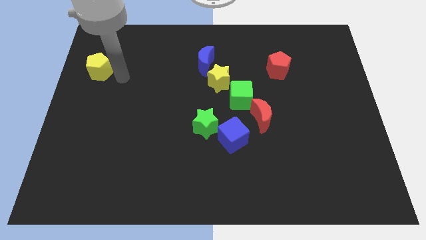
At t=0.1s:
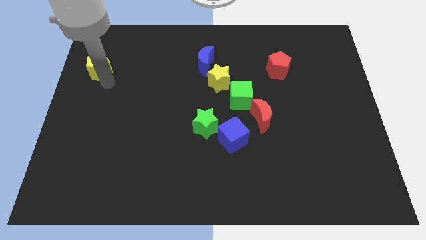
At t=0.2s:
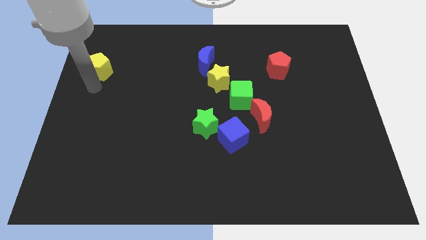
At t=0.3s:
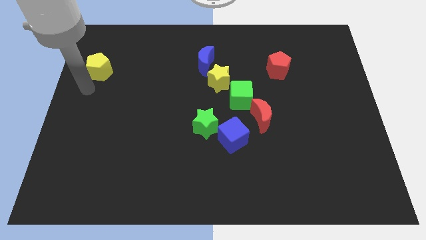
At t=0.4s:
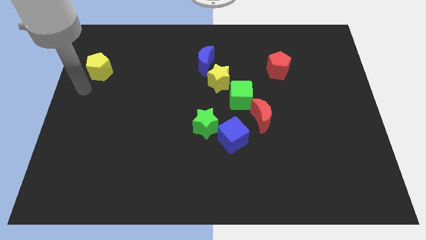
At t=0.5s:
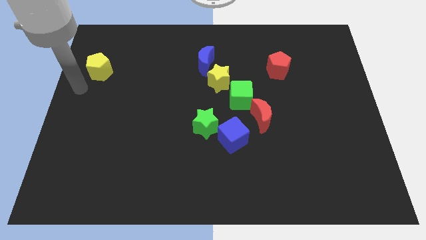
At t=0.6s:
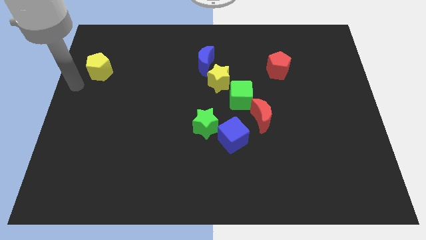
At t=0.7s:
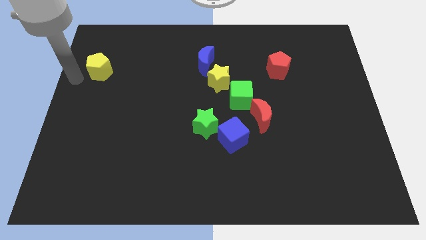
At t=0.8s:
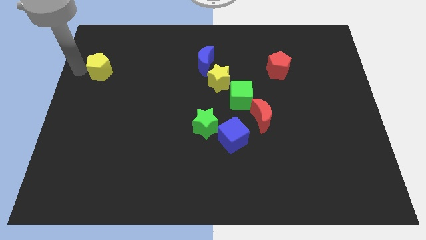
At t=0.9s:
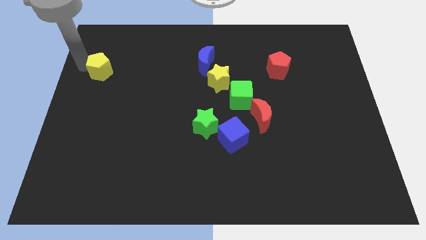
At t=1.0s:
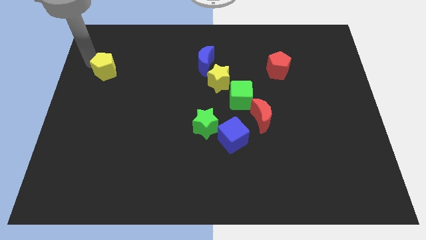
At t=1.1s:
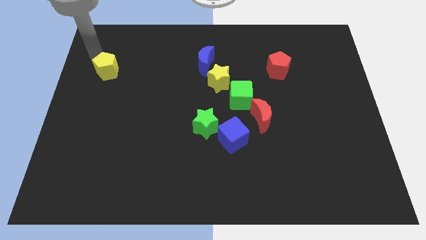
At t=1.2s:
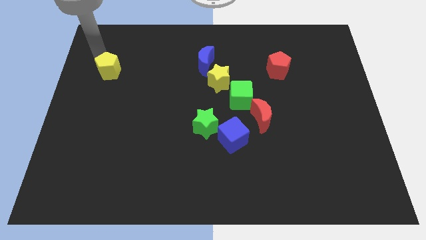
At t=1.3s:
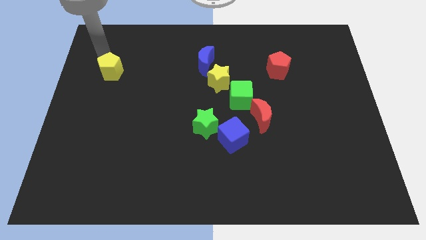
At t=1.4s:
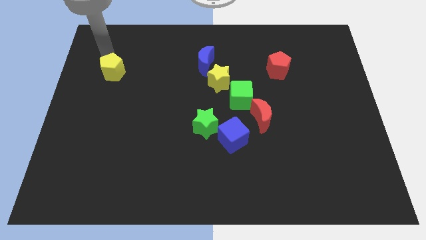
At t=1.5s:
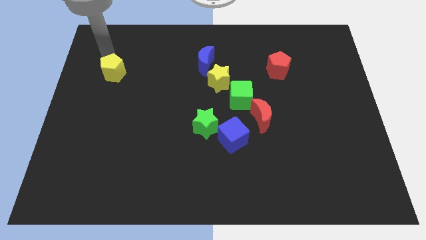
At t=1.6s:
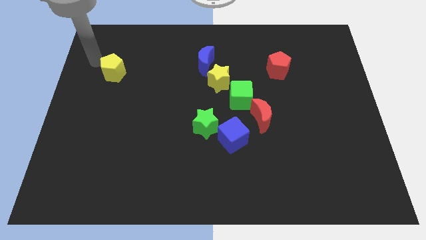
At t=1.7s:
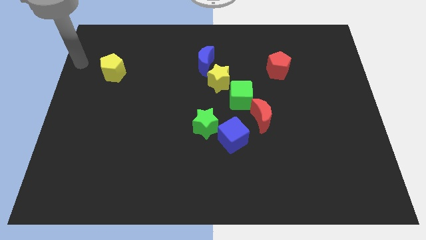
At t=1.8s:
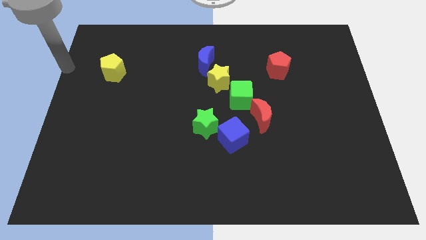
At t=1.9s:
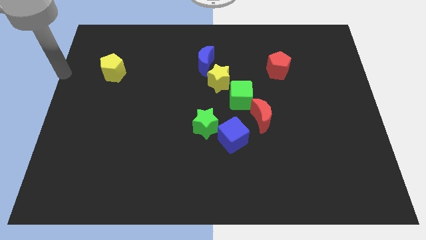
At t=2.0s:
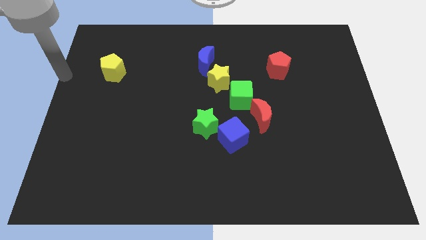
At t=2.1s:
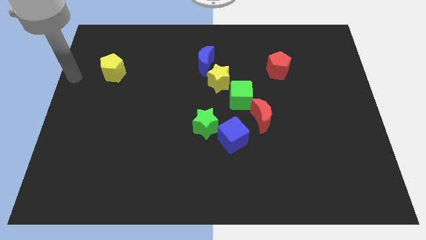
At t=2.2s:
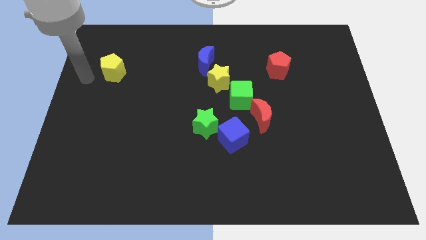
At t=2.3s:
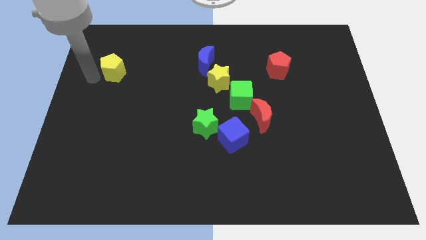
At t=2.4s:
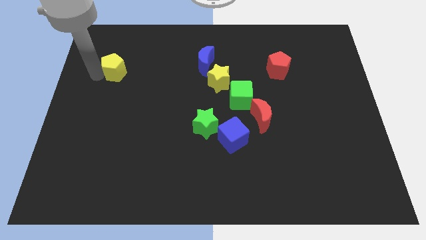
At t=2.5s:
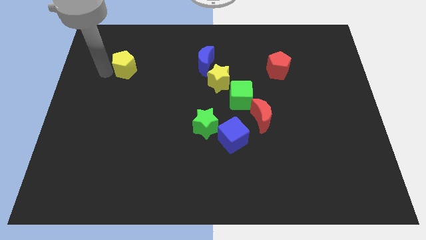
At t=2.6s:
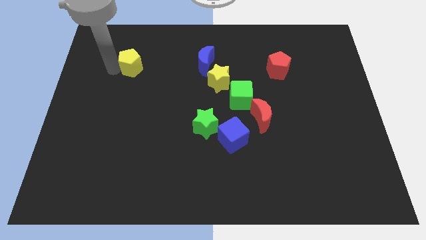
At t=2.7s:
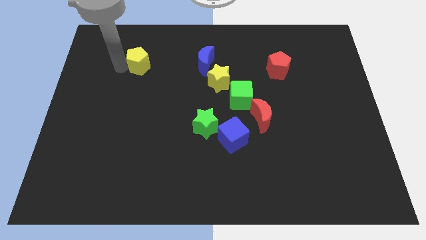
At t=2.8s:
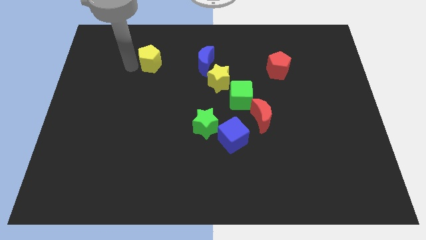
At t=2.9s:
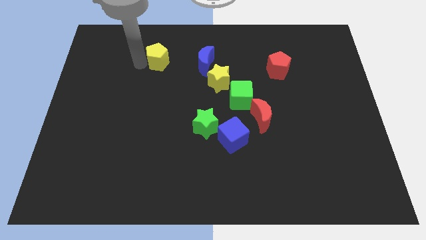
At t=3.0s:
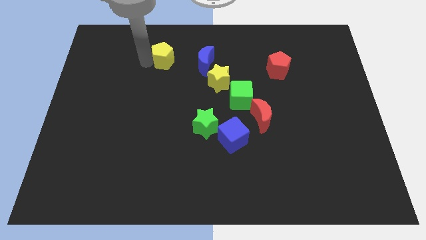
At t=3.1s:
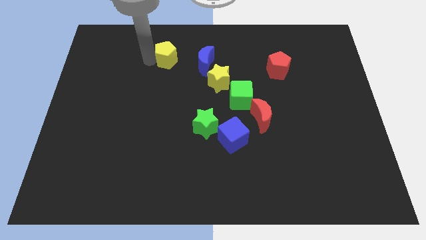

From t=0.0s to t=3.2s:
push yellow pentagon to the right

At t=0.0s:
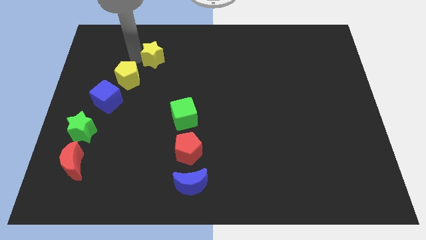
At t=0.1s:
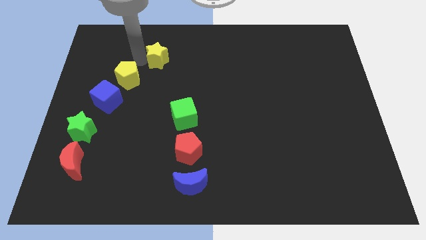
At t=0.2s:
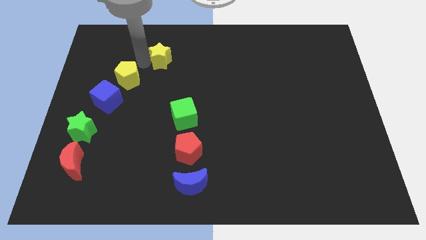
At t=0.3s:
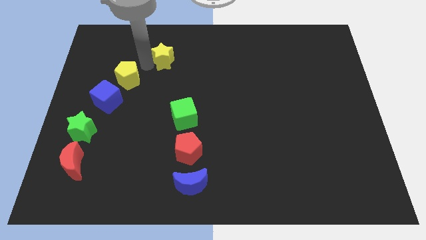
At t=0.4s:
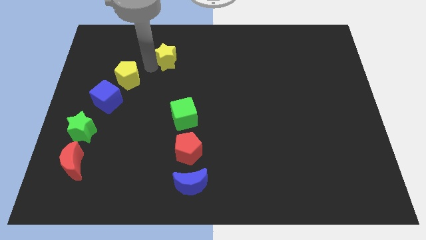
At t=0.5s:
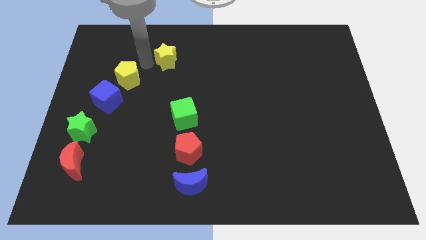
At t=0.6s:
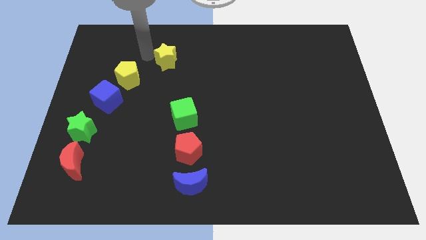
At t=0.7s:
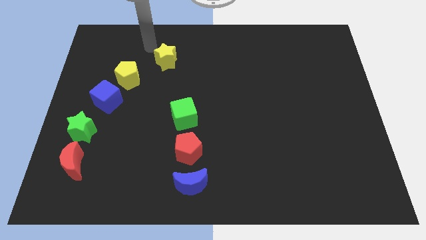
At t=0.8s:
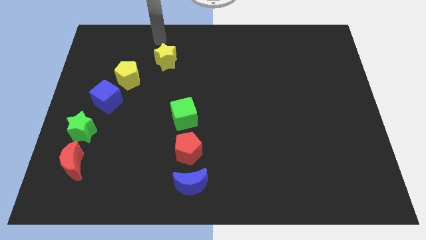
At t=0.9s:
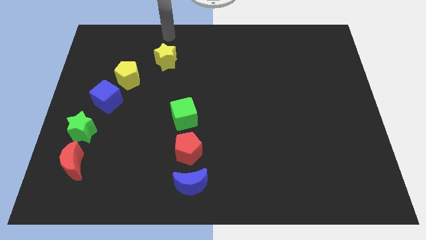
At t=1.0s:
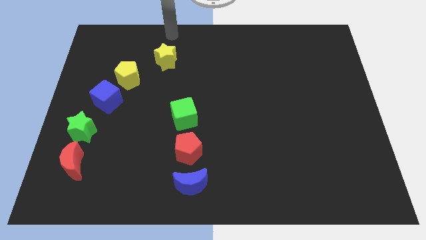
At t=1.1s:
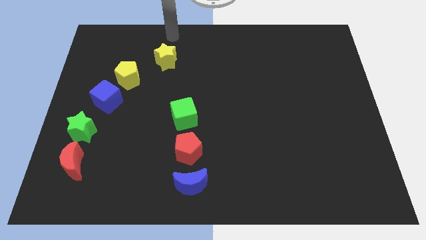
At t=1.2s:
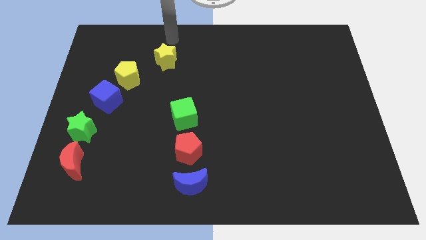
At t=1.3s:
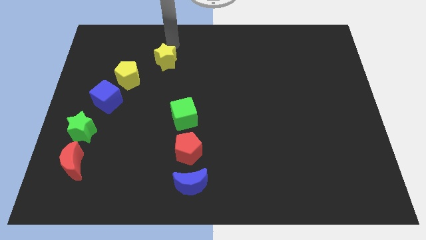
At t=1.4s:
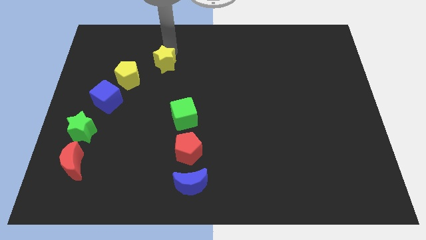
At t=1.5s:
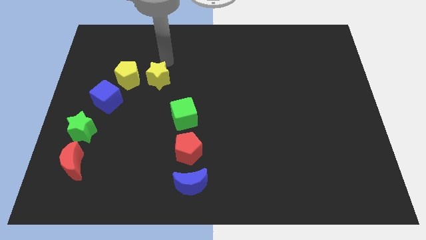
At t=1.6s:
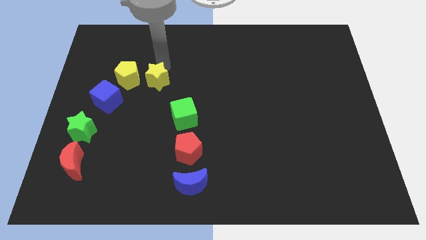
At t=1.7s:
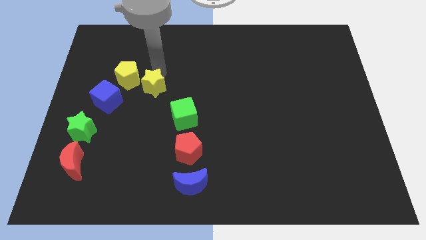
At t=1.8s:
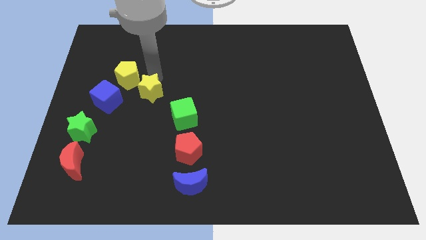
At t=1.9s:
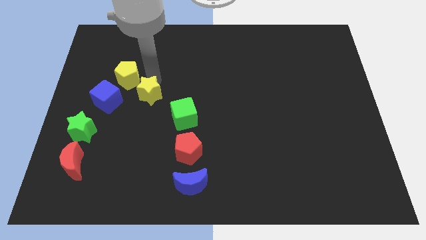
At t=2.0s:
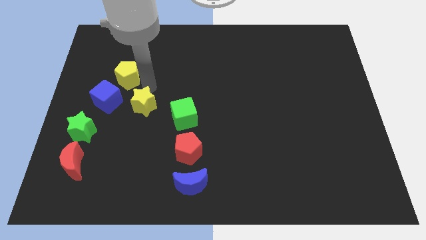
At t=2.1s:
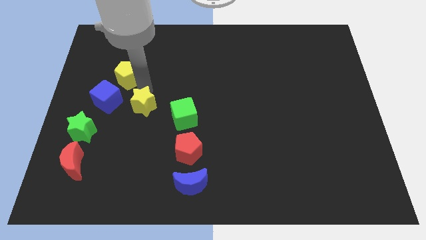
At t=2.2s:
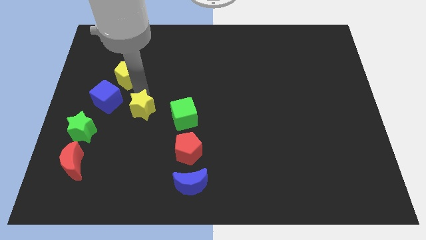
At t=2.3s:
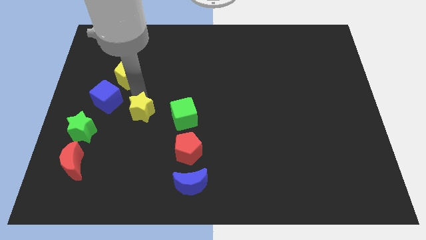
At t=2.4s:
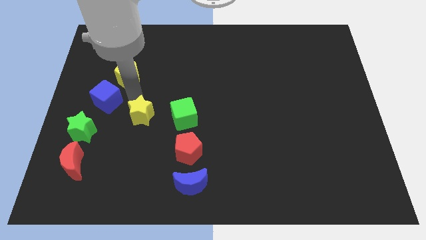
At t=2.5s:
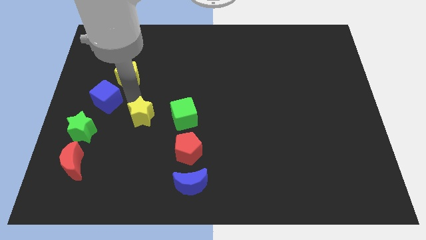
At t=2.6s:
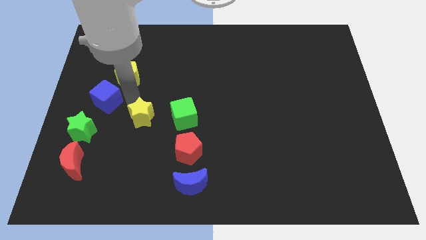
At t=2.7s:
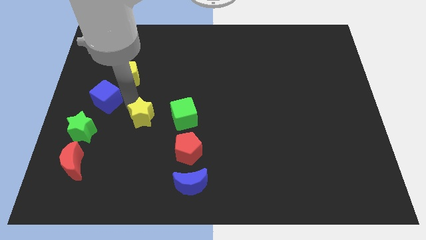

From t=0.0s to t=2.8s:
put the yellow star to the right side of blue cube

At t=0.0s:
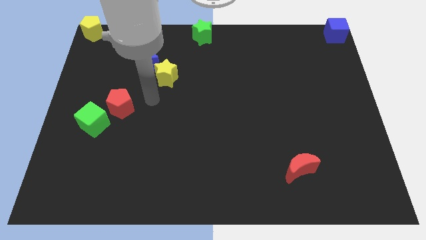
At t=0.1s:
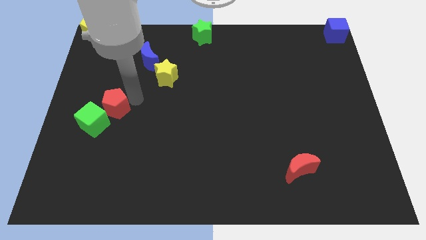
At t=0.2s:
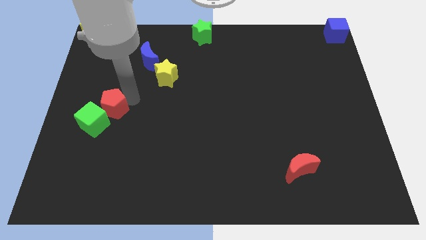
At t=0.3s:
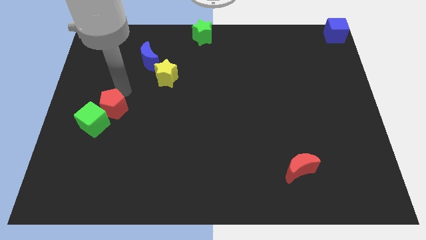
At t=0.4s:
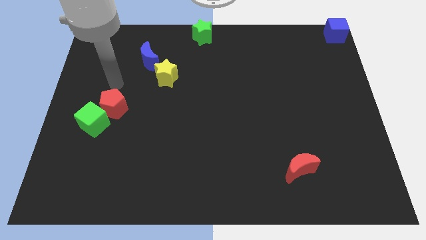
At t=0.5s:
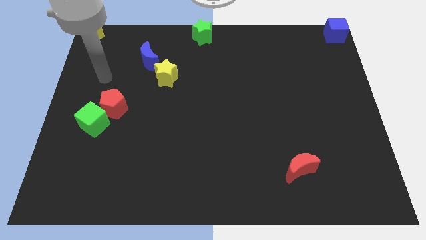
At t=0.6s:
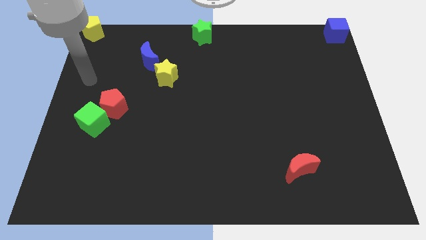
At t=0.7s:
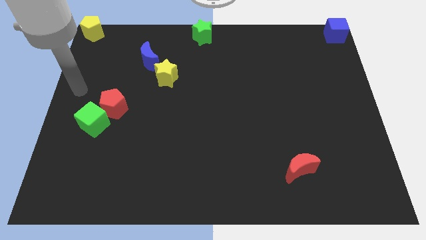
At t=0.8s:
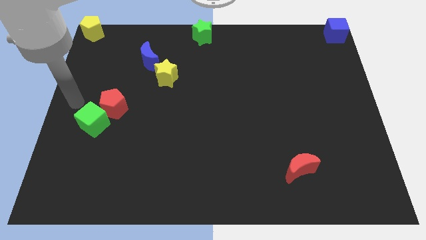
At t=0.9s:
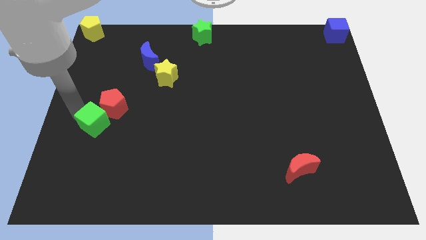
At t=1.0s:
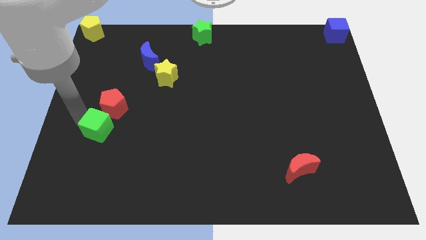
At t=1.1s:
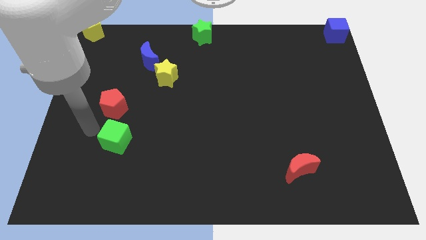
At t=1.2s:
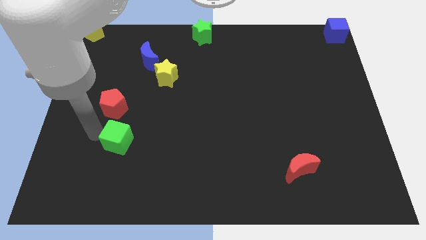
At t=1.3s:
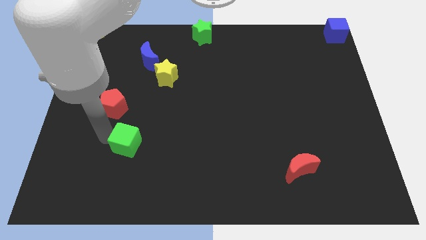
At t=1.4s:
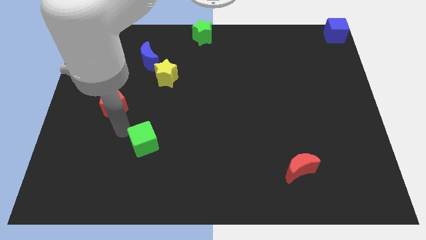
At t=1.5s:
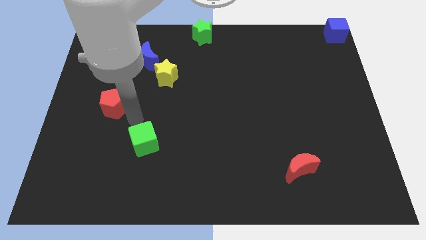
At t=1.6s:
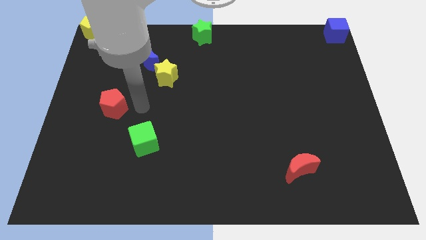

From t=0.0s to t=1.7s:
separate red pentagon from green cube

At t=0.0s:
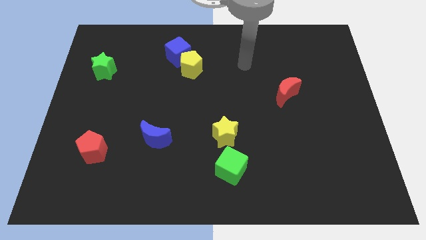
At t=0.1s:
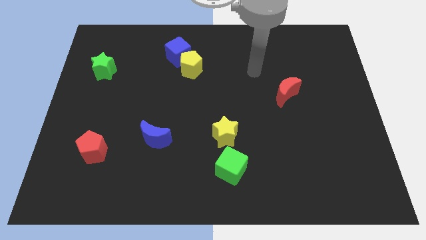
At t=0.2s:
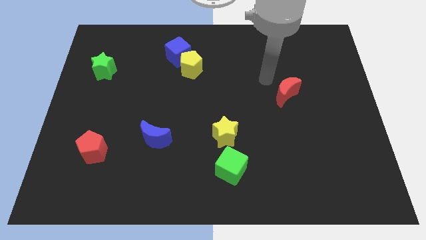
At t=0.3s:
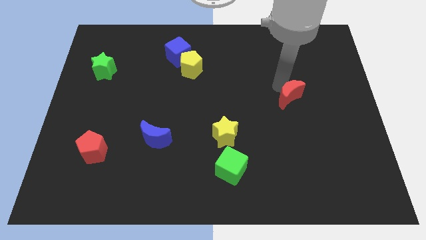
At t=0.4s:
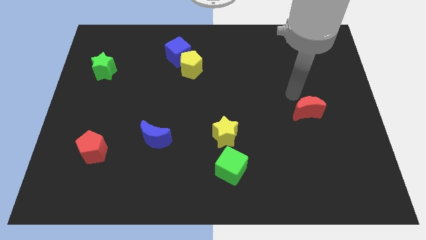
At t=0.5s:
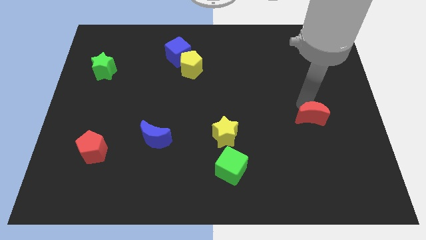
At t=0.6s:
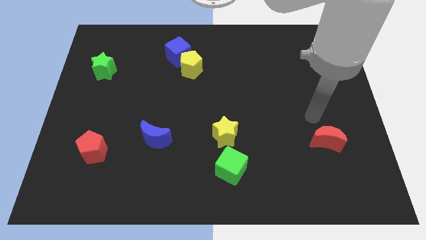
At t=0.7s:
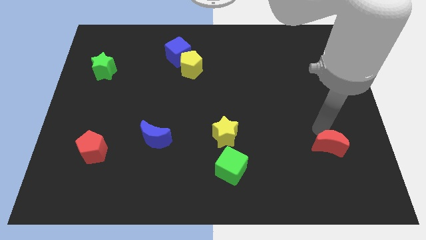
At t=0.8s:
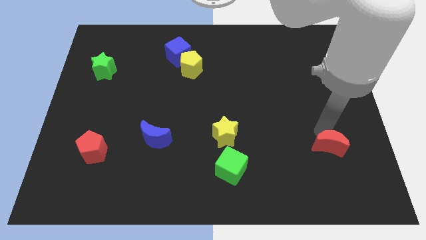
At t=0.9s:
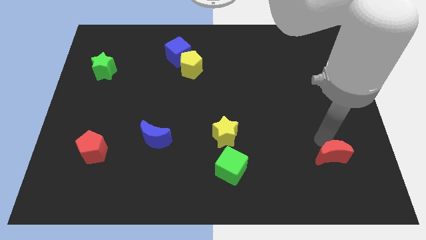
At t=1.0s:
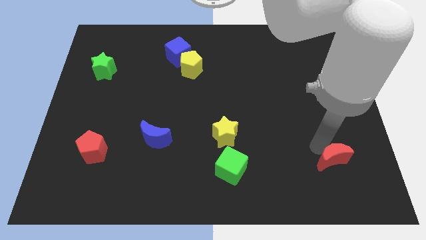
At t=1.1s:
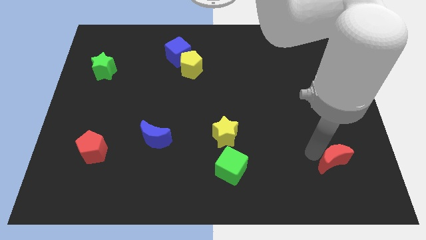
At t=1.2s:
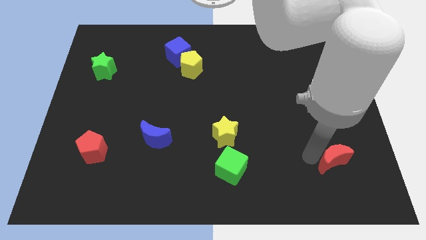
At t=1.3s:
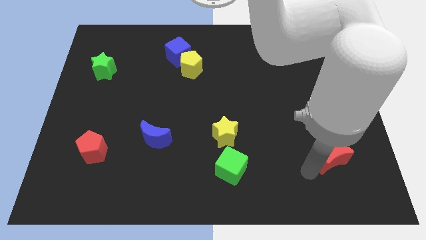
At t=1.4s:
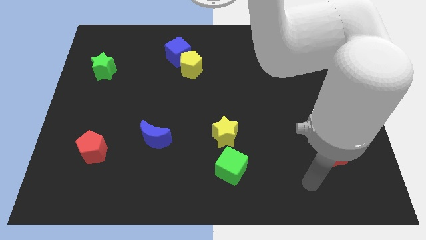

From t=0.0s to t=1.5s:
push the red crescent towards the bottom side of the board
